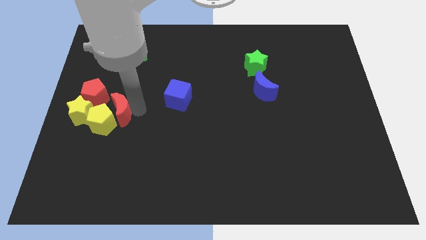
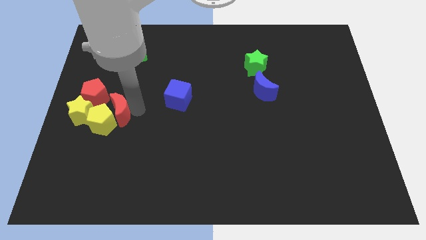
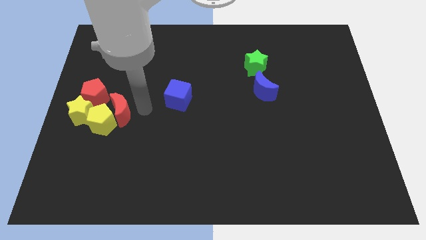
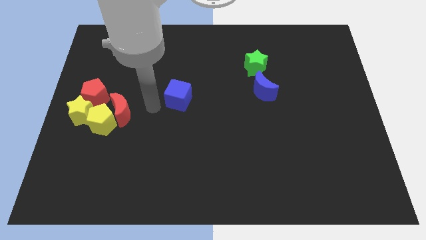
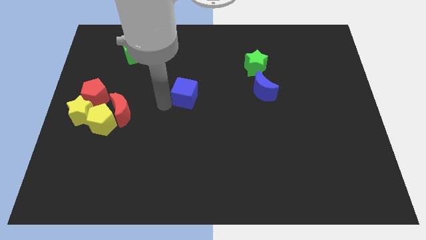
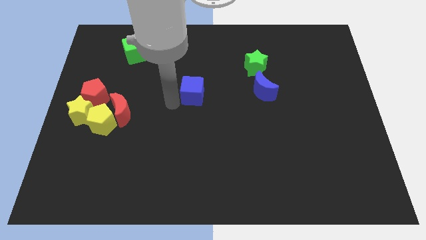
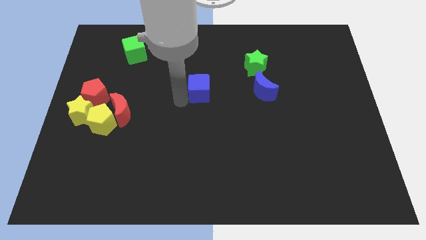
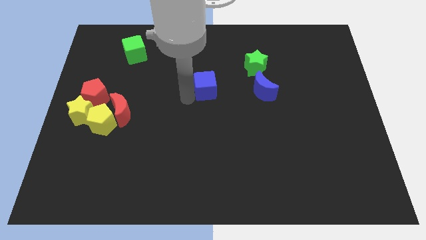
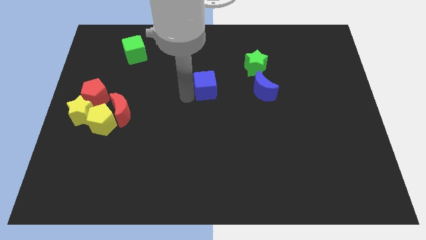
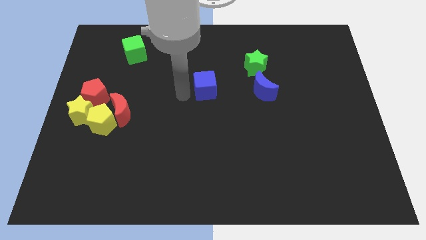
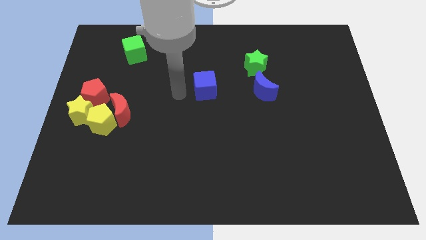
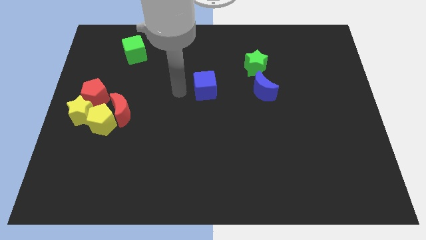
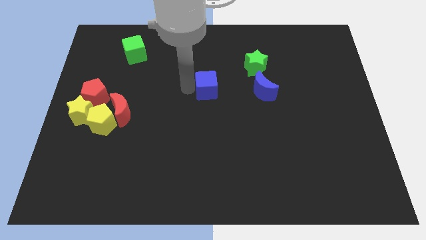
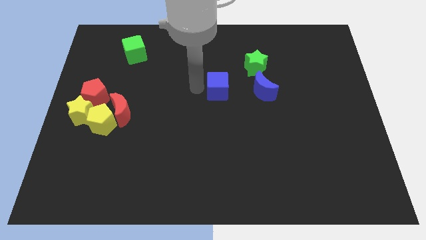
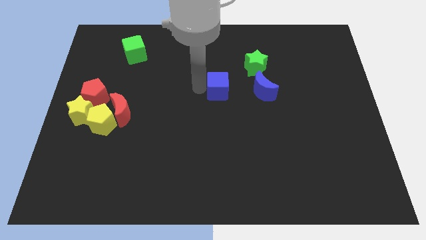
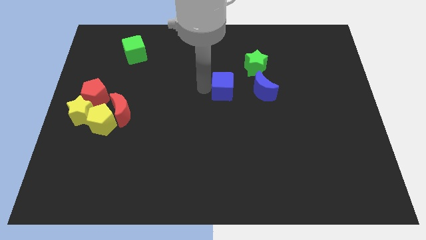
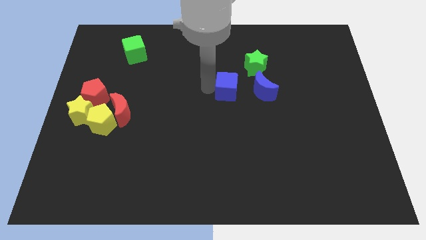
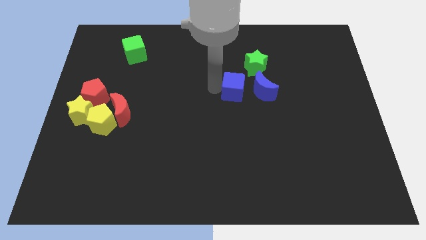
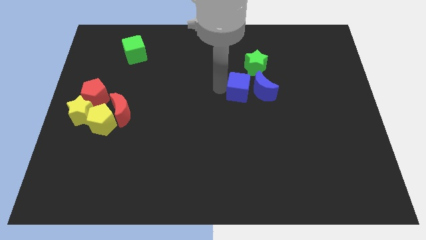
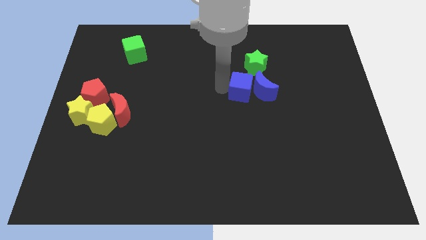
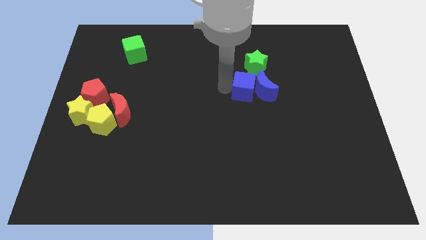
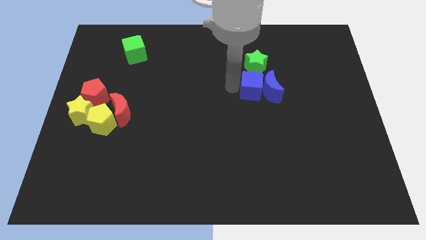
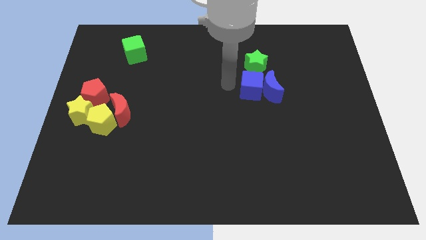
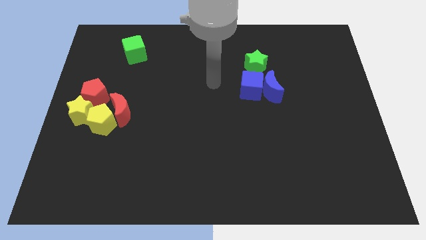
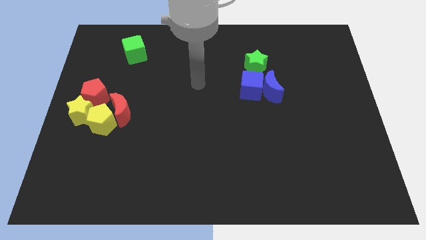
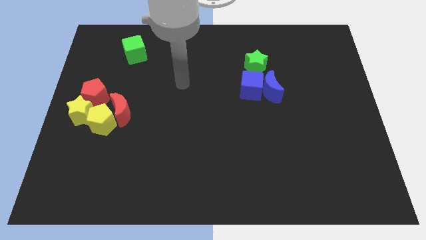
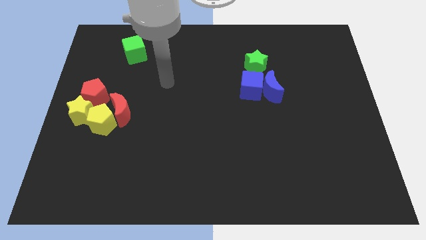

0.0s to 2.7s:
place the blue blocks at the bottom of green star

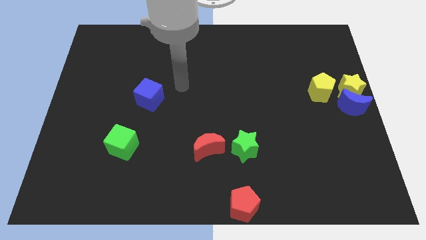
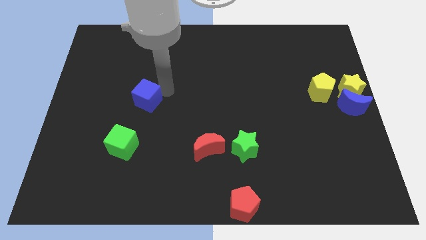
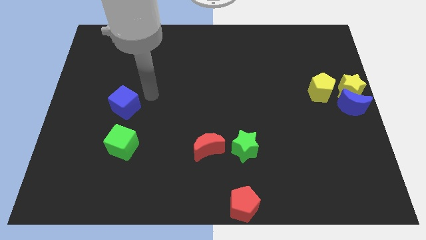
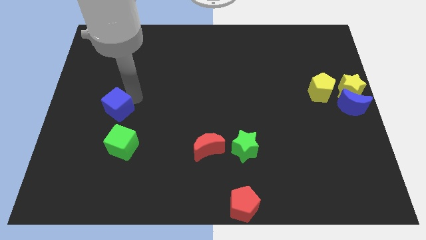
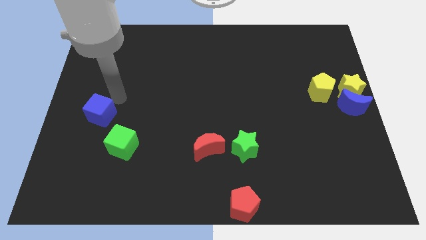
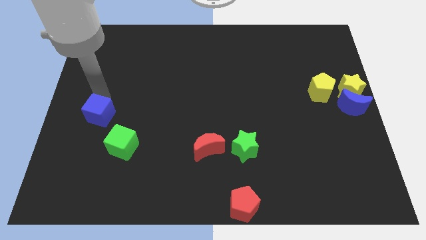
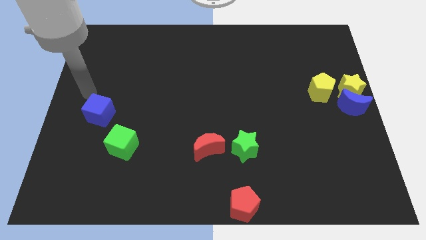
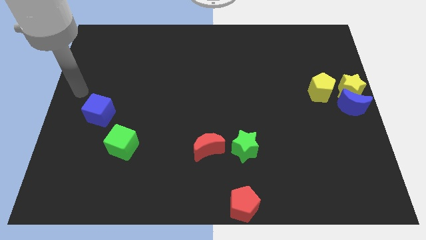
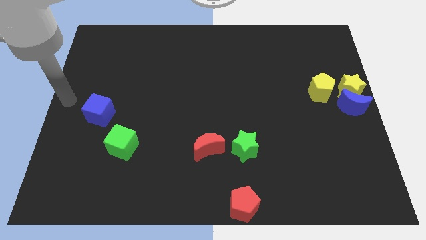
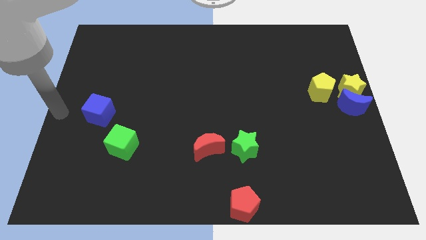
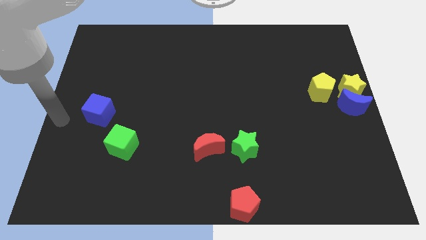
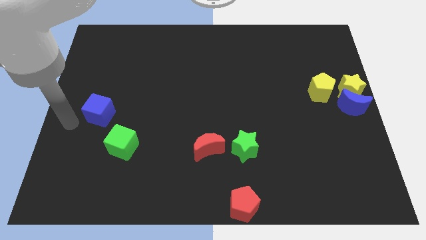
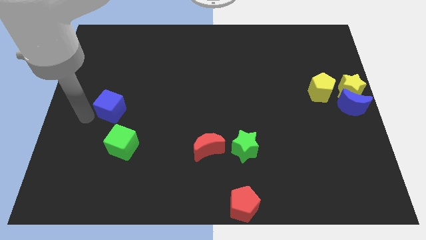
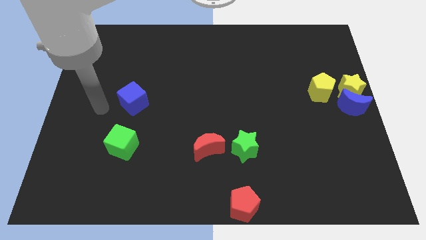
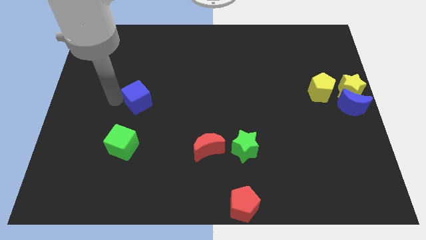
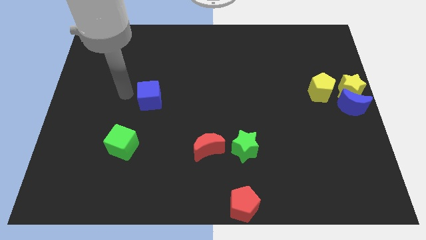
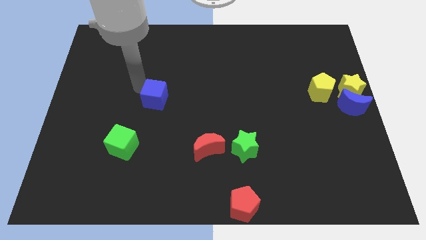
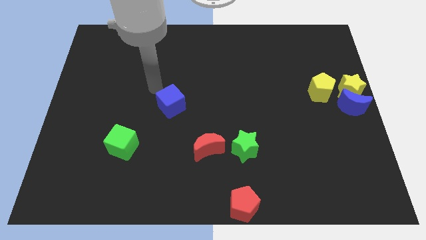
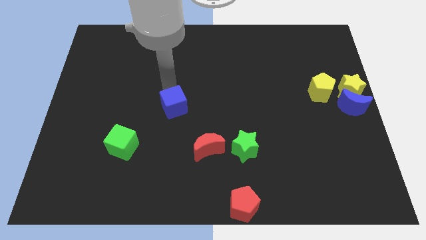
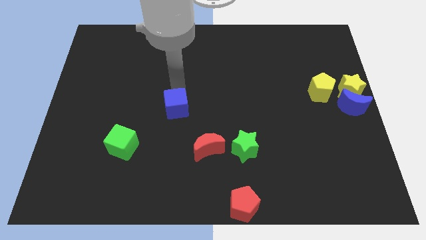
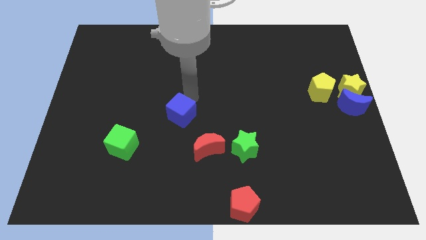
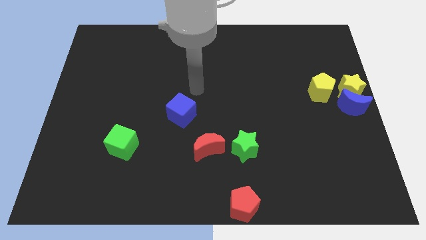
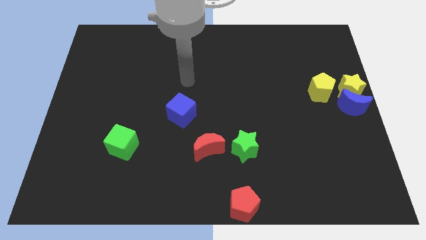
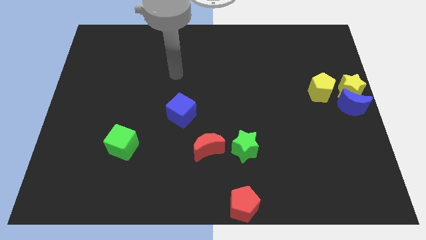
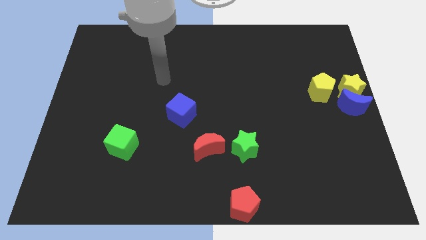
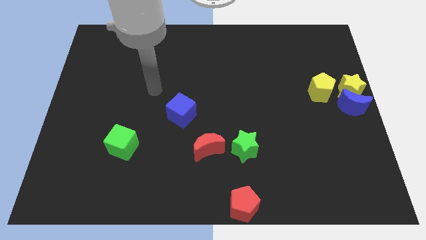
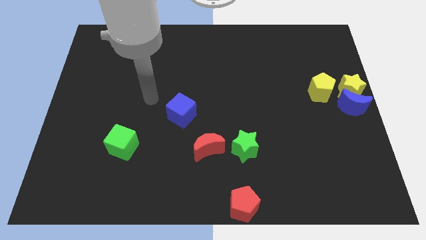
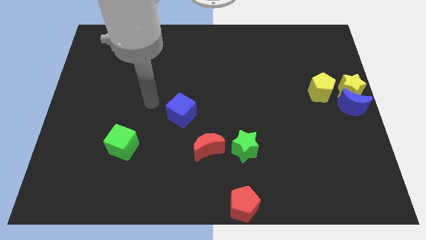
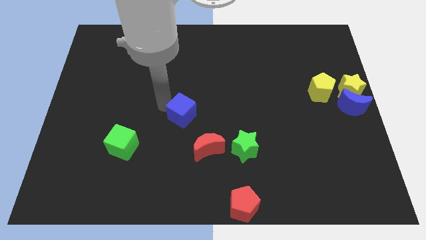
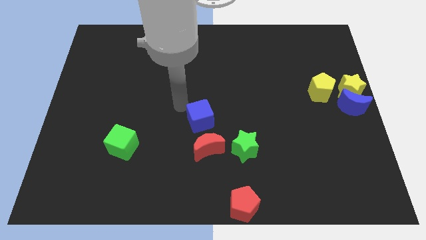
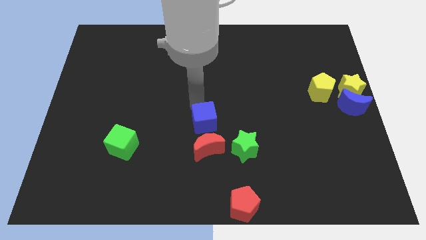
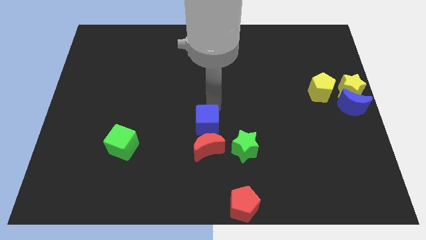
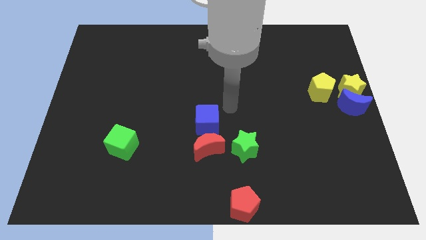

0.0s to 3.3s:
put the blue cube above the red crescent

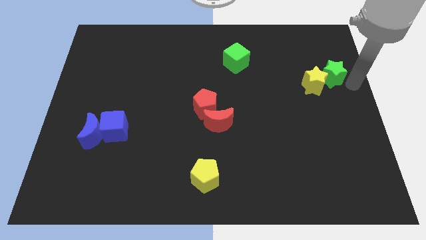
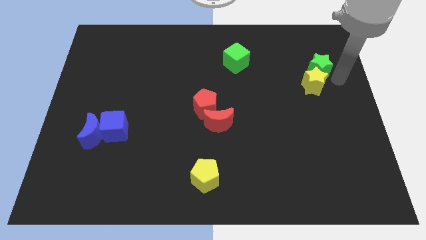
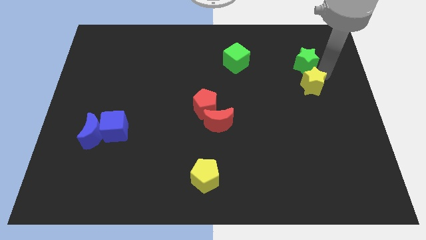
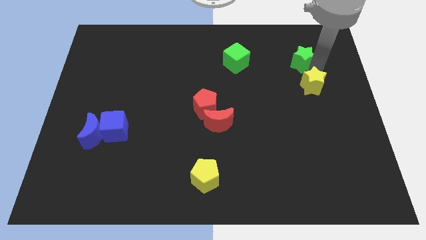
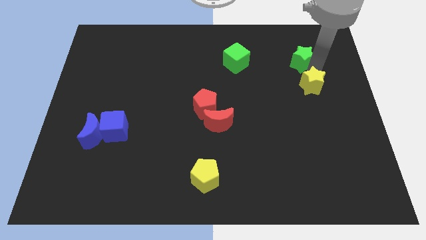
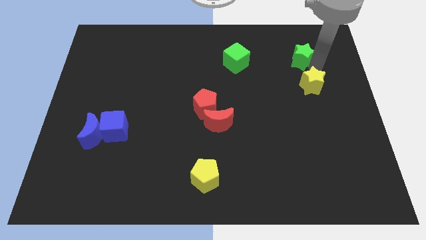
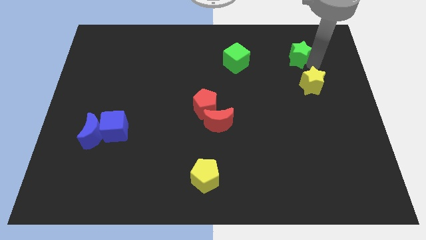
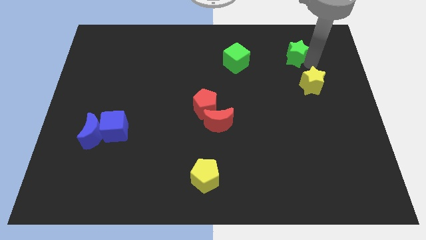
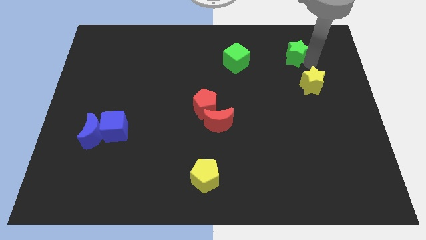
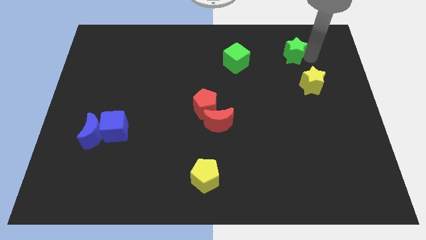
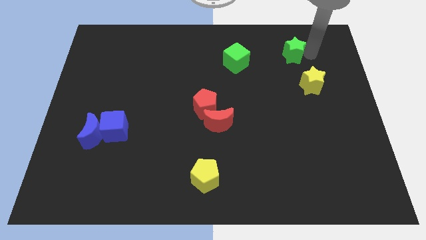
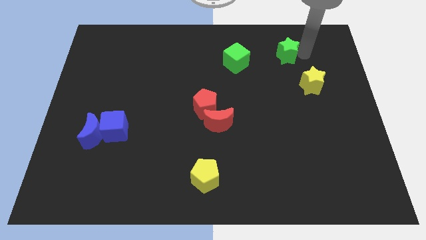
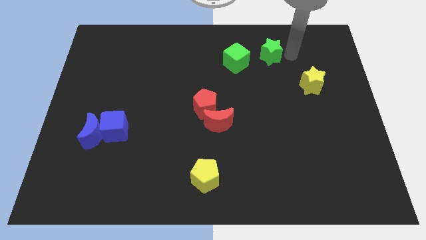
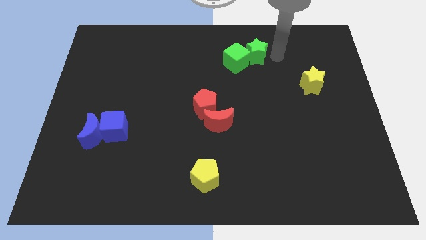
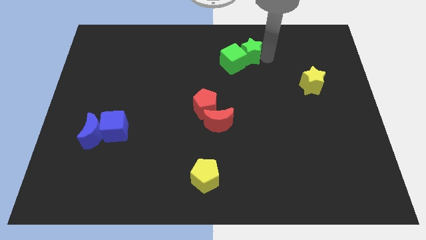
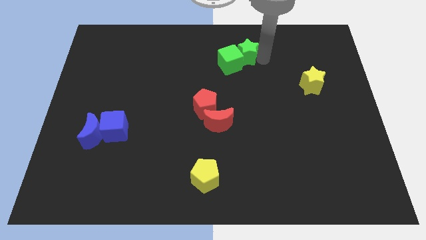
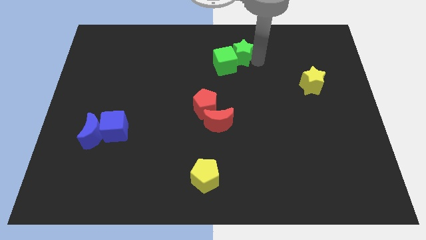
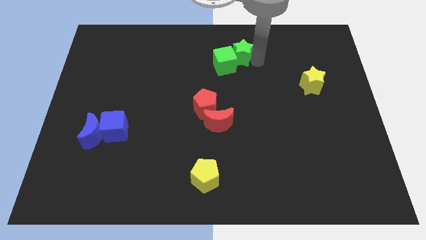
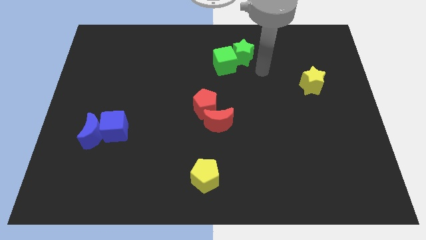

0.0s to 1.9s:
push the green star into the green cube

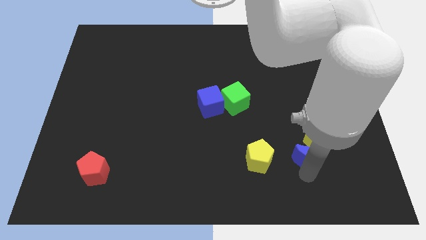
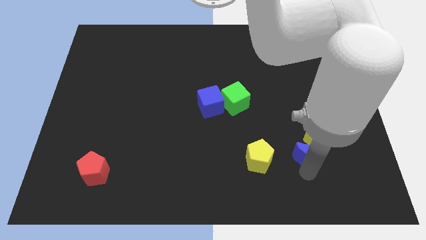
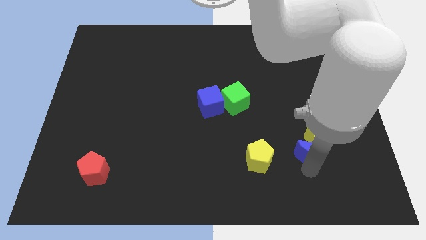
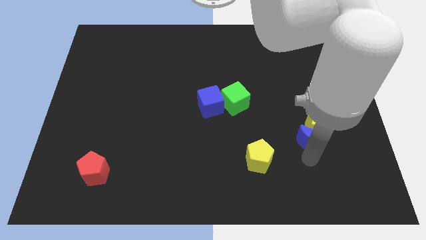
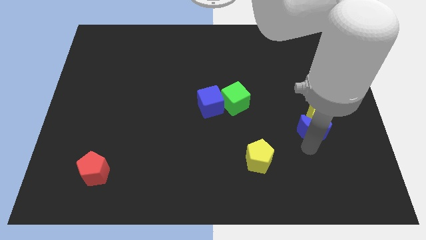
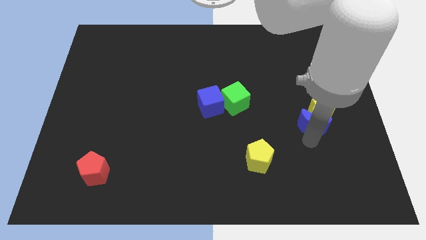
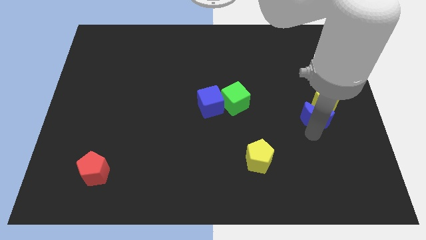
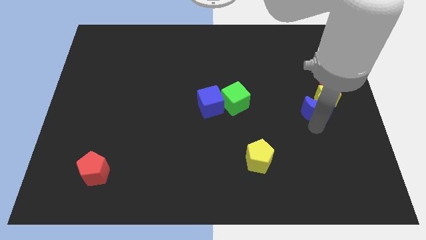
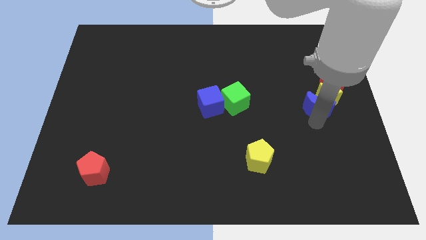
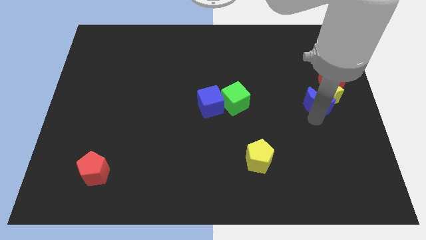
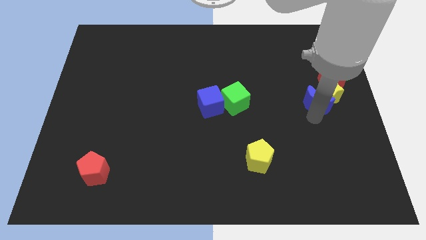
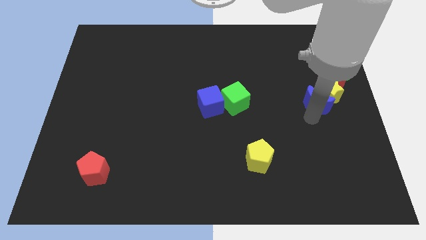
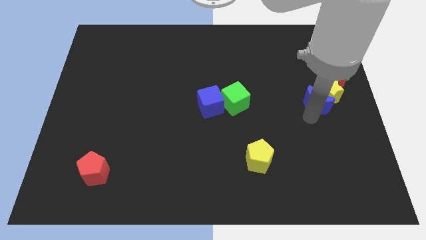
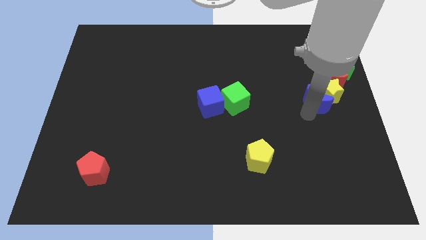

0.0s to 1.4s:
drag the yellow star and the blue moon towards the center right of the board
